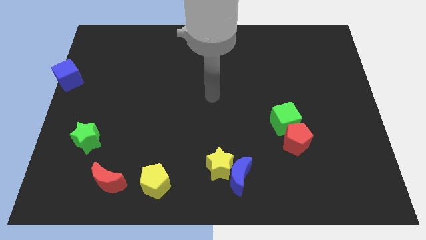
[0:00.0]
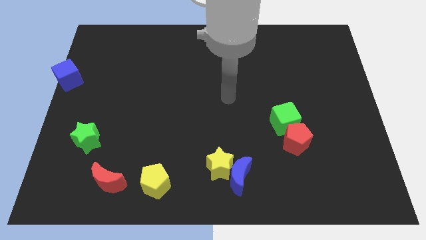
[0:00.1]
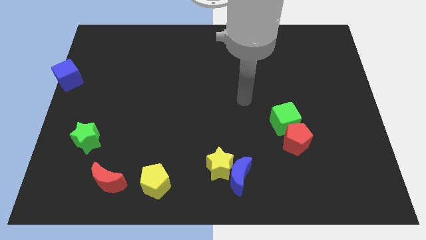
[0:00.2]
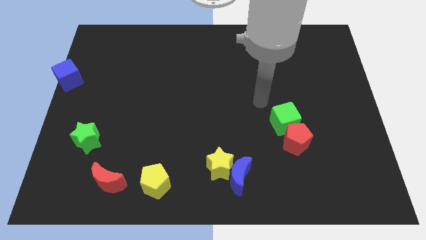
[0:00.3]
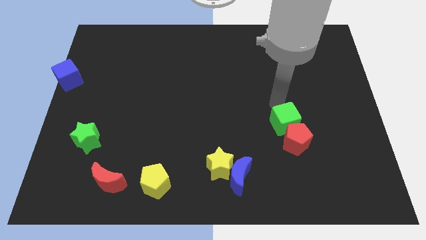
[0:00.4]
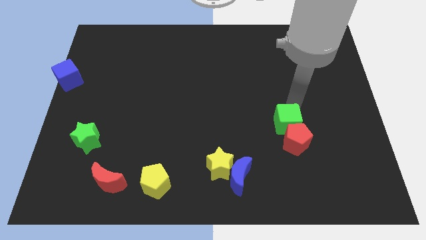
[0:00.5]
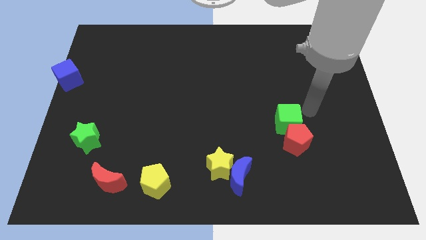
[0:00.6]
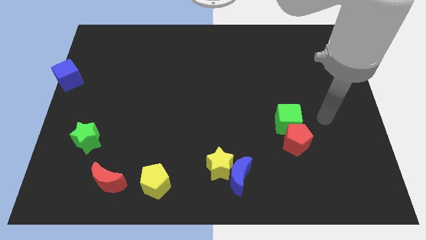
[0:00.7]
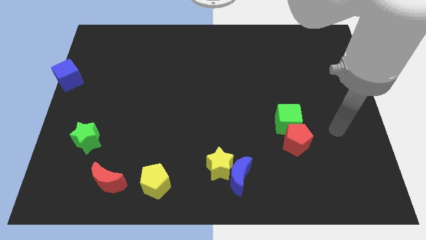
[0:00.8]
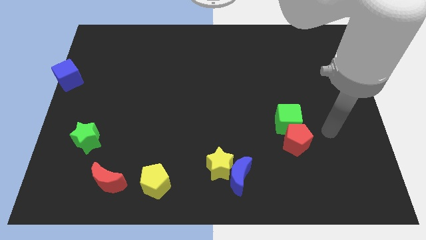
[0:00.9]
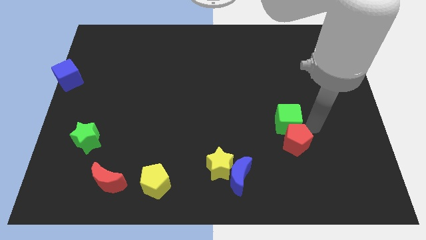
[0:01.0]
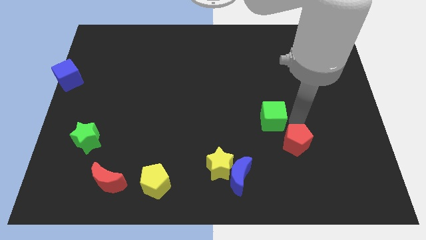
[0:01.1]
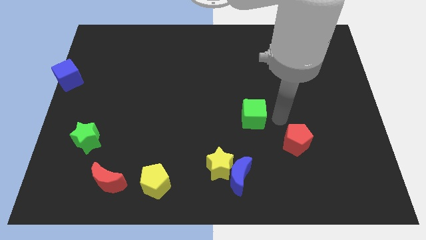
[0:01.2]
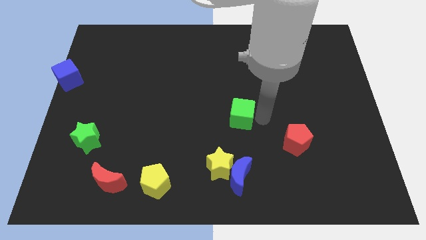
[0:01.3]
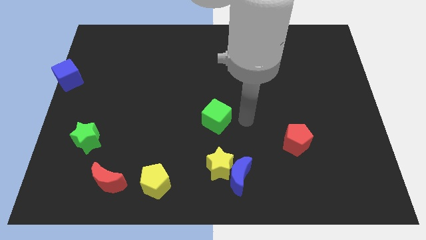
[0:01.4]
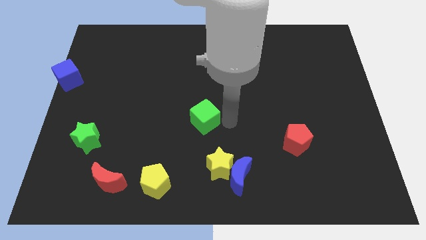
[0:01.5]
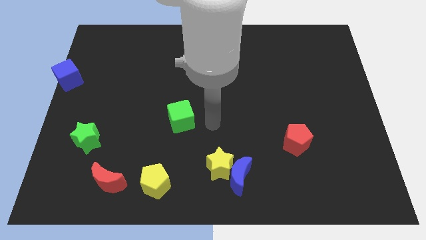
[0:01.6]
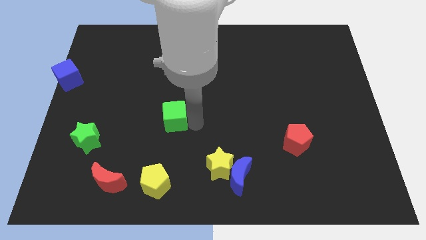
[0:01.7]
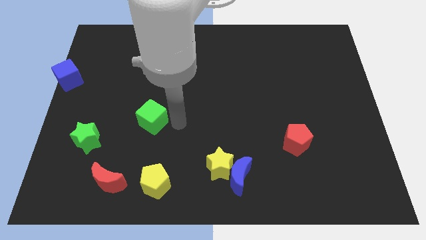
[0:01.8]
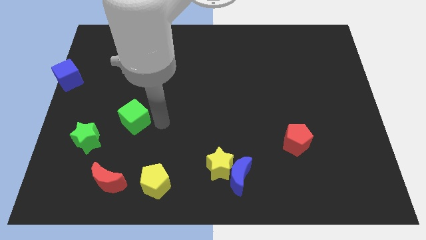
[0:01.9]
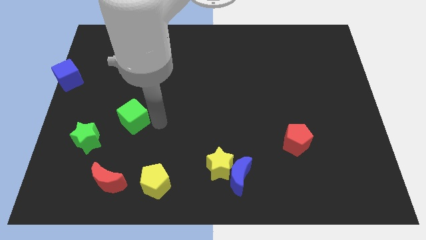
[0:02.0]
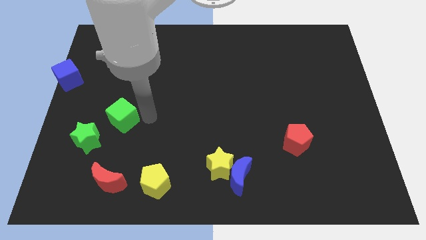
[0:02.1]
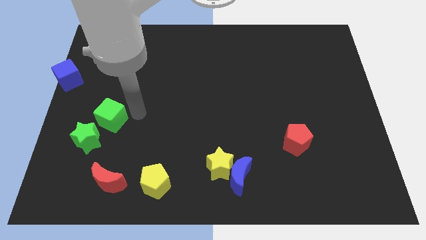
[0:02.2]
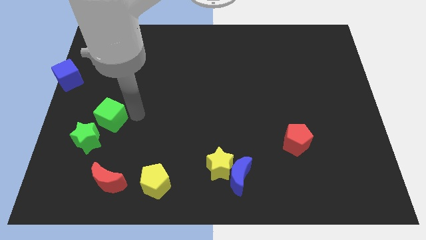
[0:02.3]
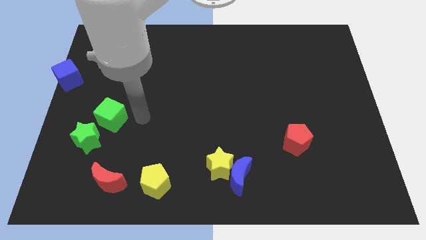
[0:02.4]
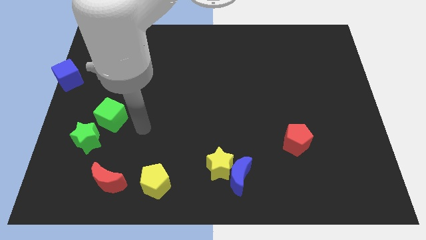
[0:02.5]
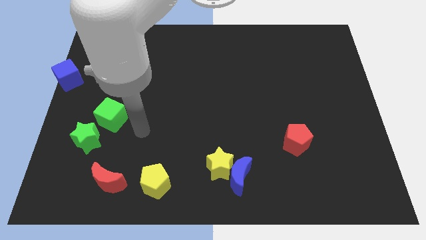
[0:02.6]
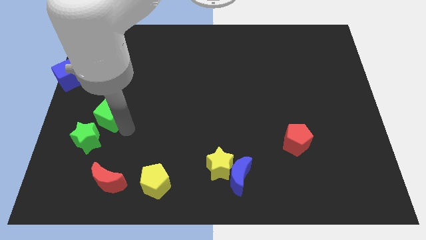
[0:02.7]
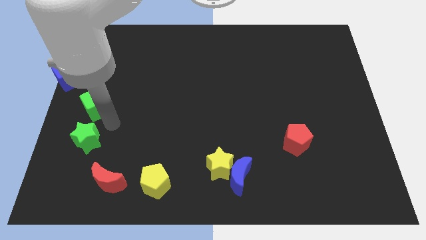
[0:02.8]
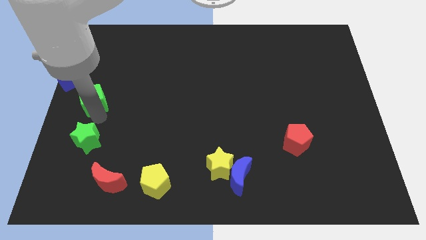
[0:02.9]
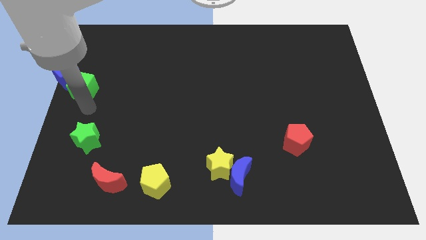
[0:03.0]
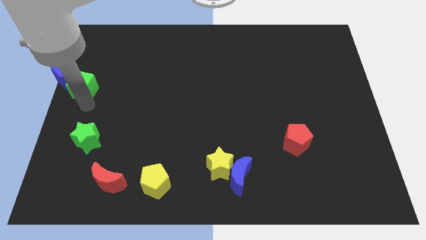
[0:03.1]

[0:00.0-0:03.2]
push the green cube towards the blue cube

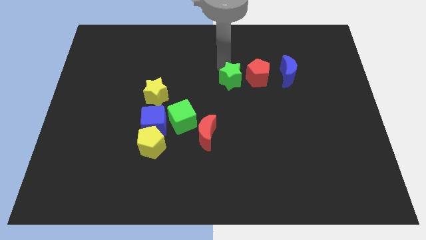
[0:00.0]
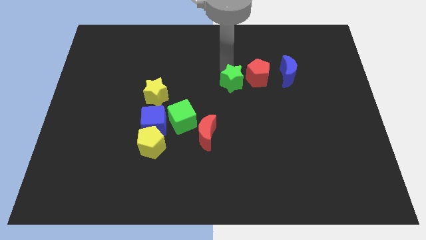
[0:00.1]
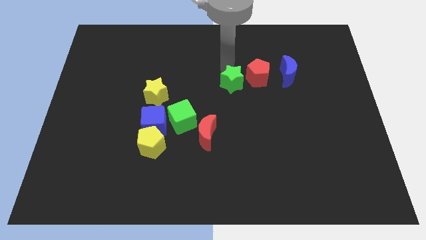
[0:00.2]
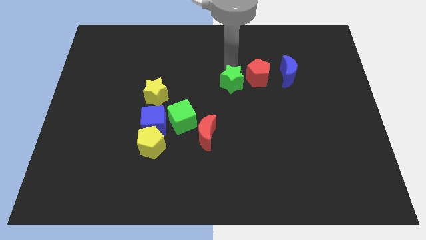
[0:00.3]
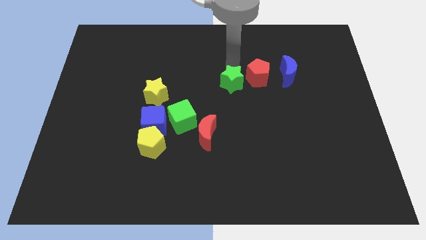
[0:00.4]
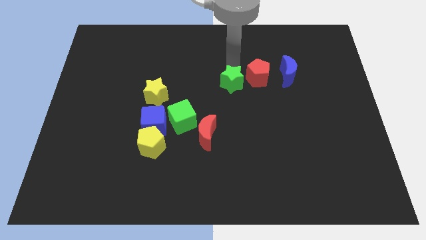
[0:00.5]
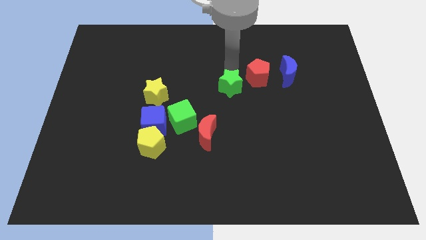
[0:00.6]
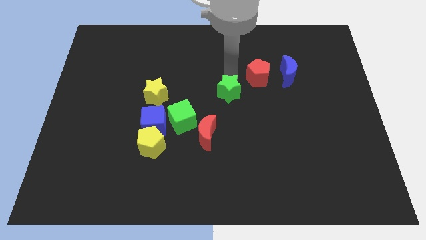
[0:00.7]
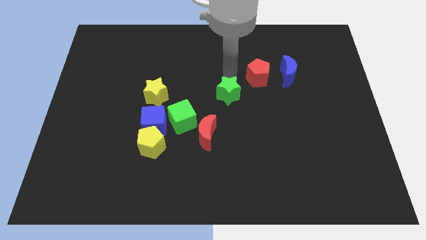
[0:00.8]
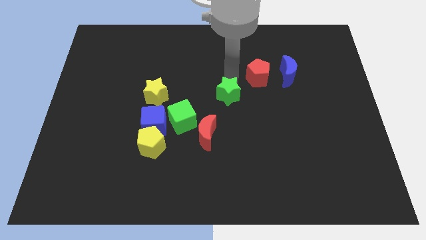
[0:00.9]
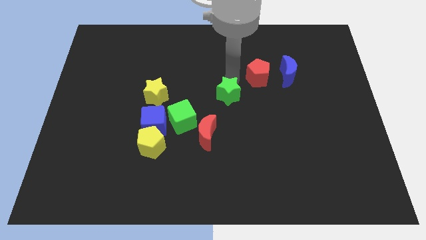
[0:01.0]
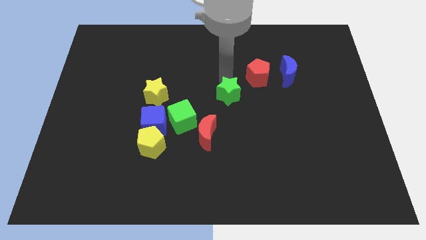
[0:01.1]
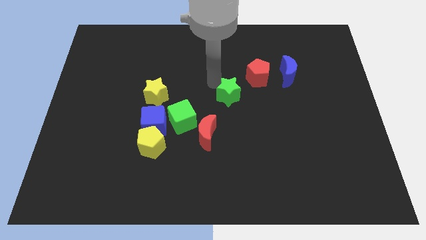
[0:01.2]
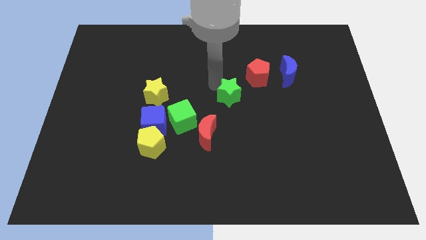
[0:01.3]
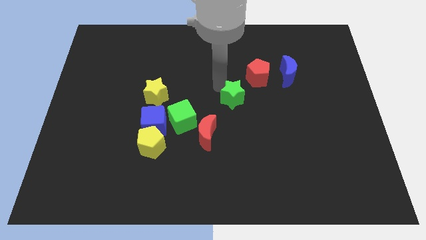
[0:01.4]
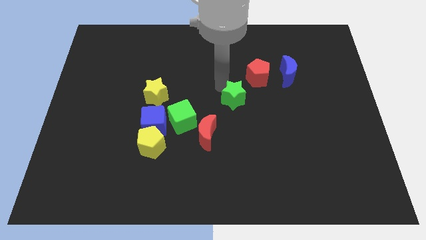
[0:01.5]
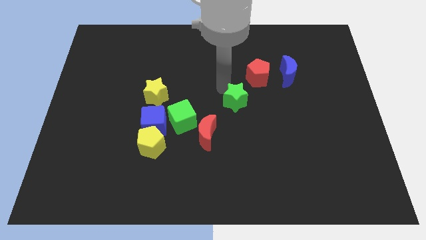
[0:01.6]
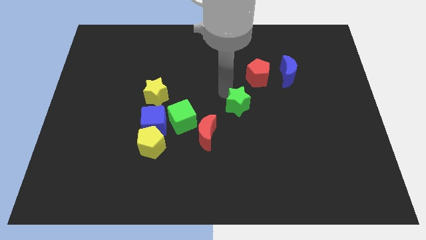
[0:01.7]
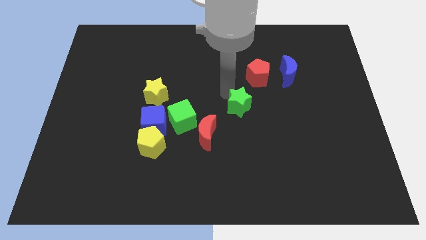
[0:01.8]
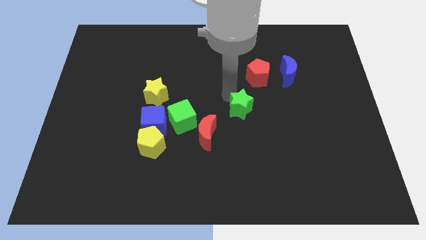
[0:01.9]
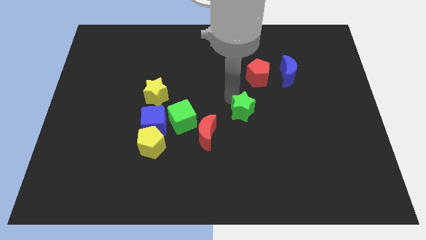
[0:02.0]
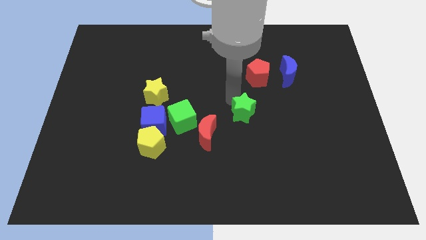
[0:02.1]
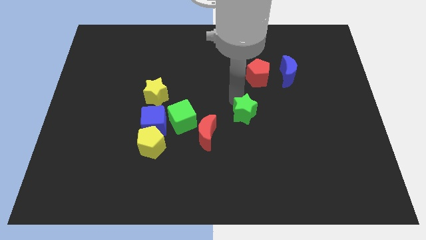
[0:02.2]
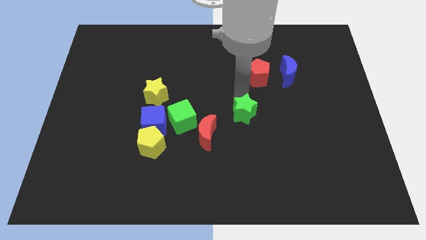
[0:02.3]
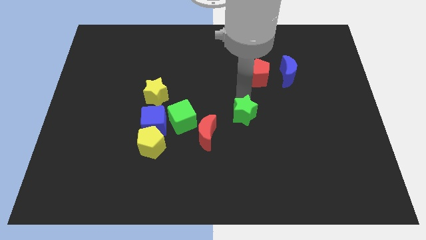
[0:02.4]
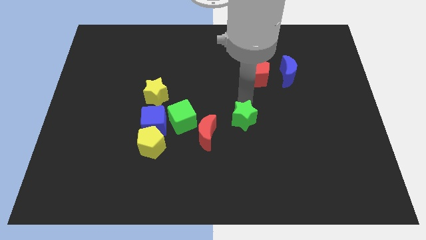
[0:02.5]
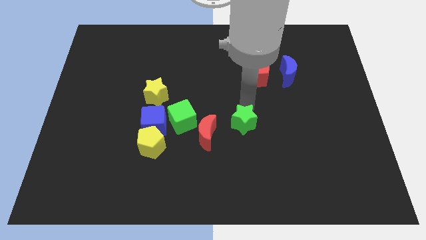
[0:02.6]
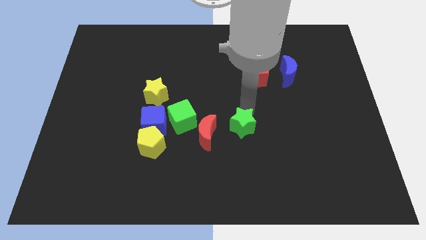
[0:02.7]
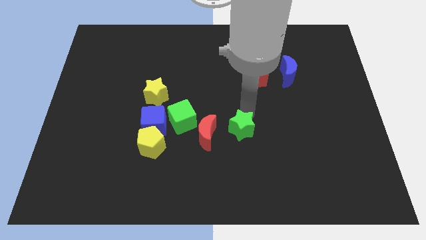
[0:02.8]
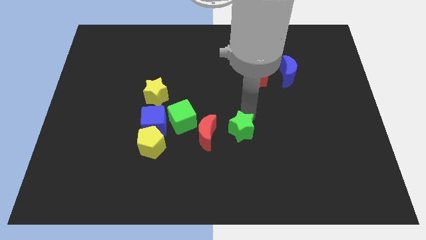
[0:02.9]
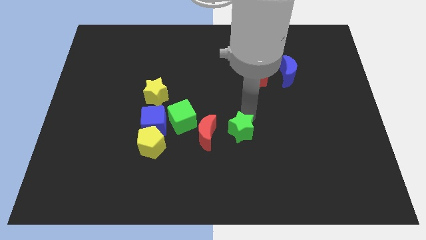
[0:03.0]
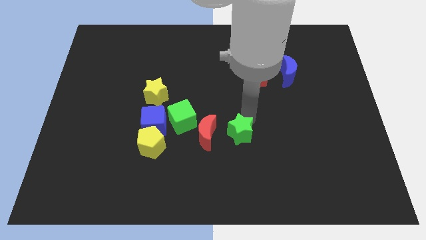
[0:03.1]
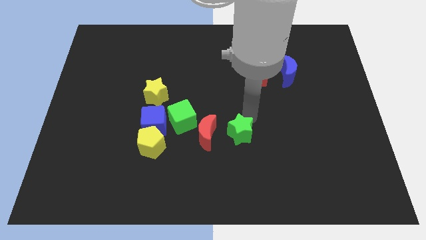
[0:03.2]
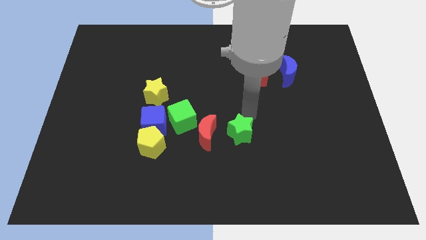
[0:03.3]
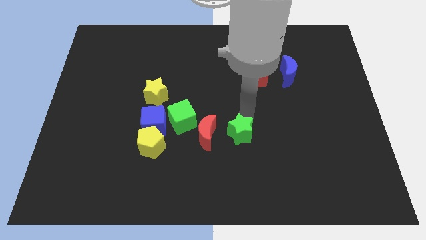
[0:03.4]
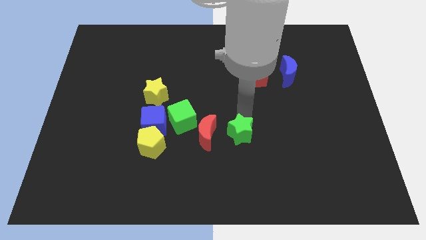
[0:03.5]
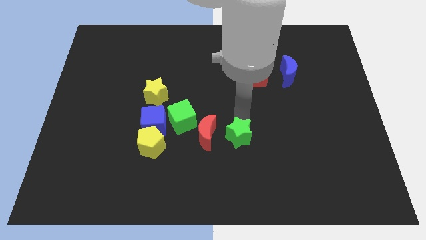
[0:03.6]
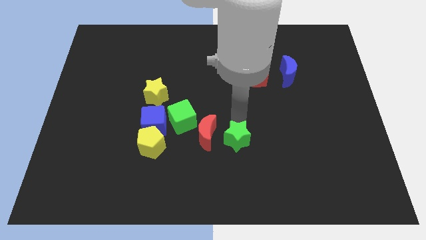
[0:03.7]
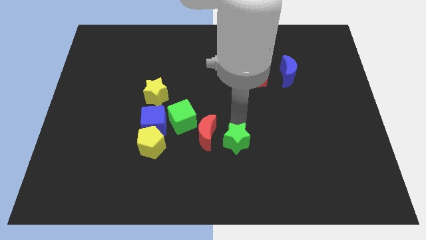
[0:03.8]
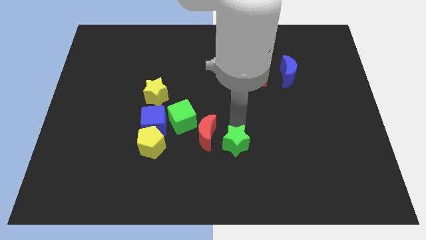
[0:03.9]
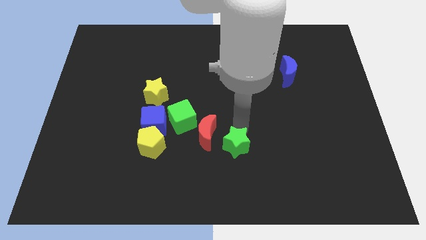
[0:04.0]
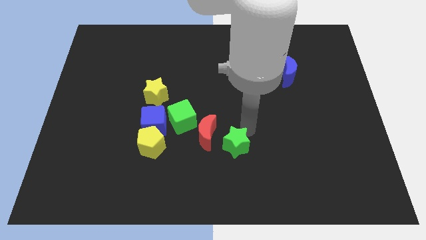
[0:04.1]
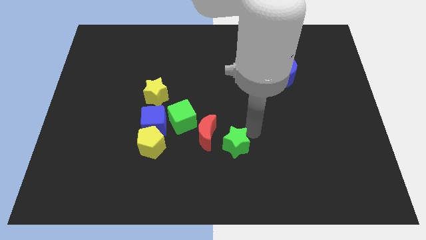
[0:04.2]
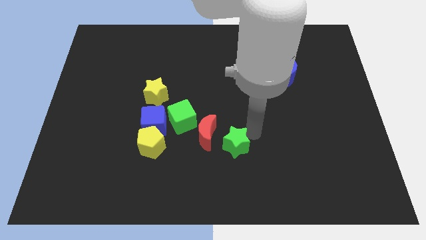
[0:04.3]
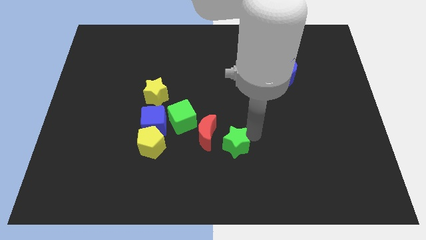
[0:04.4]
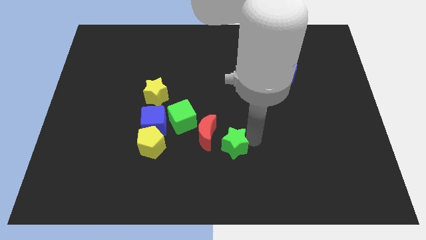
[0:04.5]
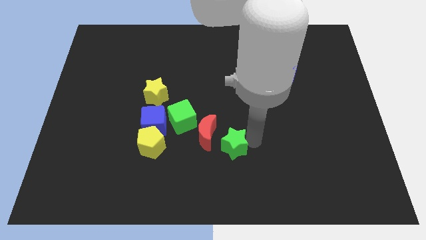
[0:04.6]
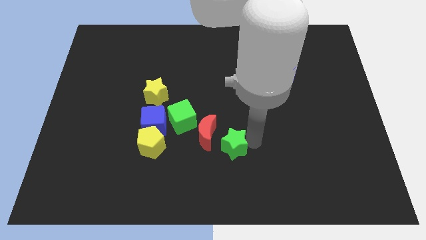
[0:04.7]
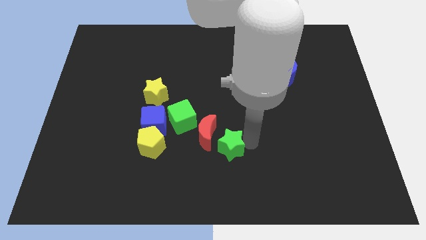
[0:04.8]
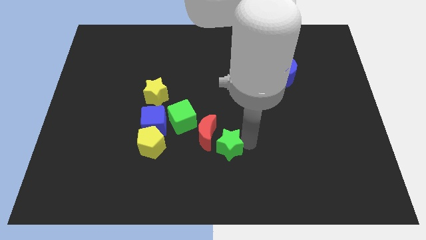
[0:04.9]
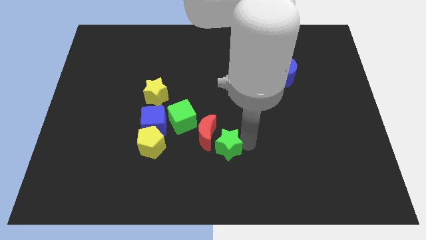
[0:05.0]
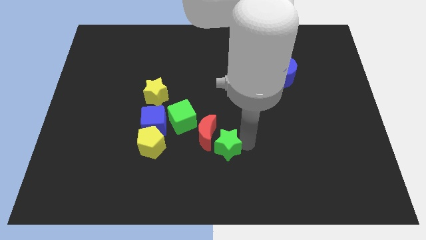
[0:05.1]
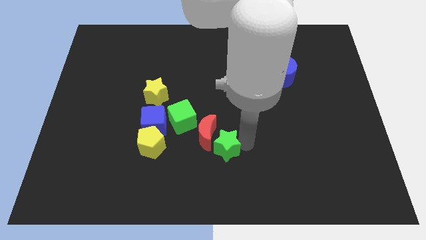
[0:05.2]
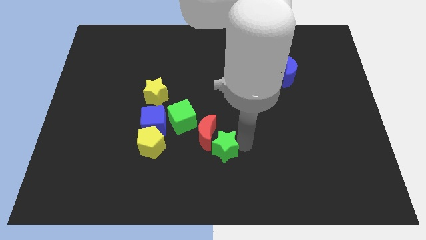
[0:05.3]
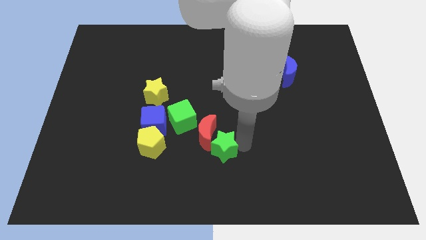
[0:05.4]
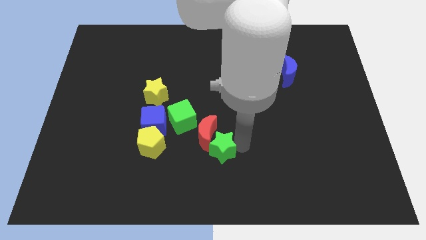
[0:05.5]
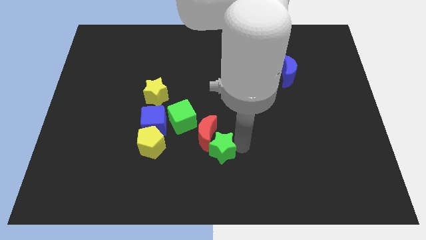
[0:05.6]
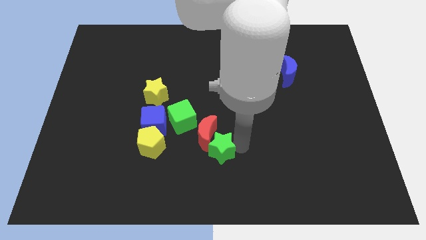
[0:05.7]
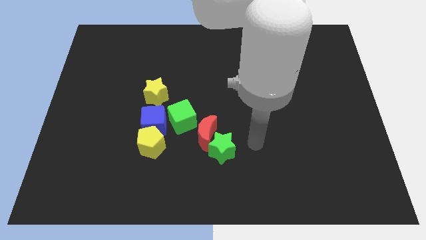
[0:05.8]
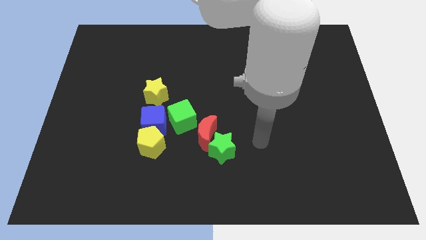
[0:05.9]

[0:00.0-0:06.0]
push green star into red moon
